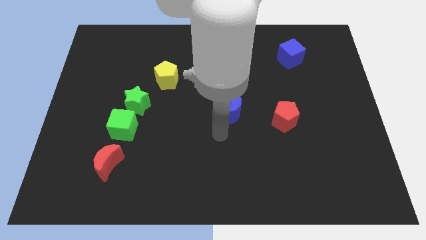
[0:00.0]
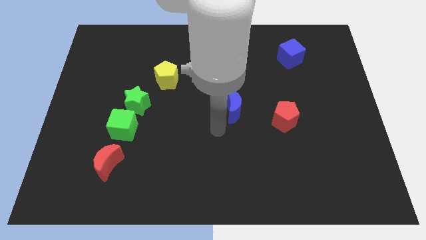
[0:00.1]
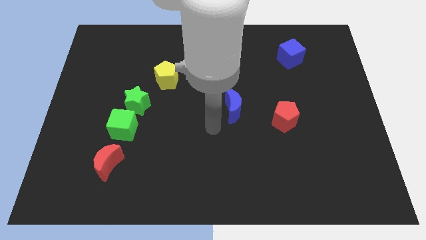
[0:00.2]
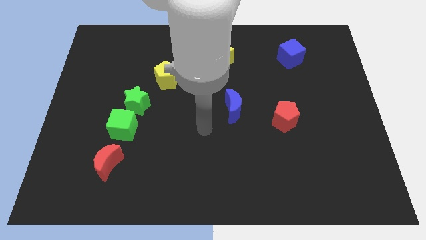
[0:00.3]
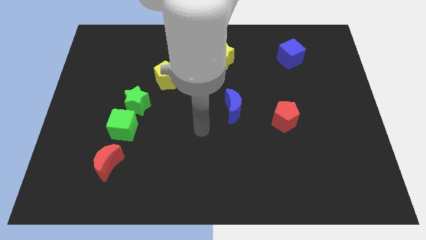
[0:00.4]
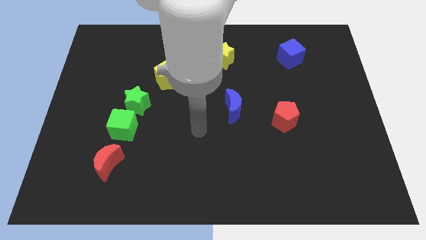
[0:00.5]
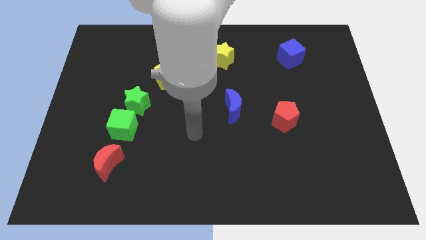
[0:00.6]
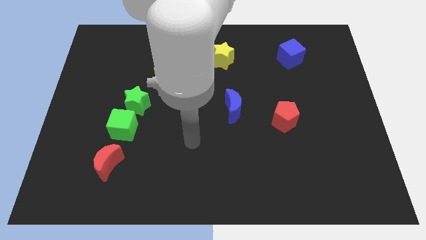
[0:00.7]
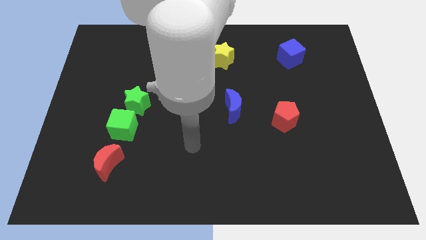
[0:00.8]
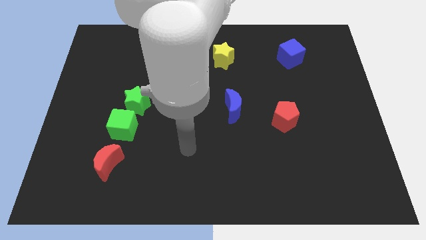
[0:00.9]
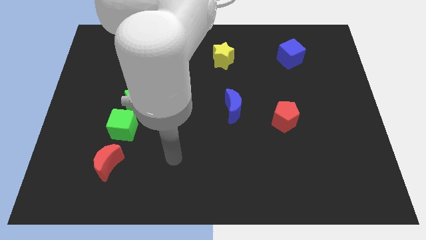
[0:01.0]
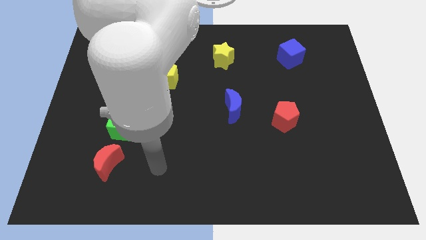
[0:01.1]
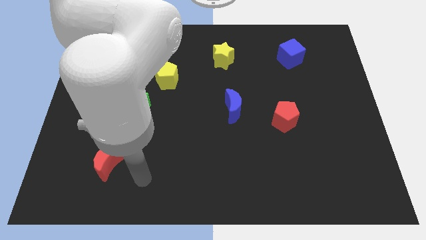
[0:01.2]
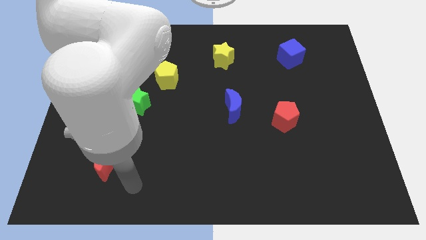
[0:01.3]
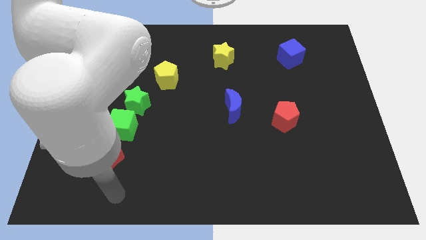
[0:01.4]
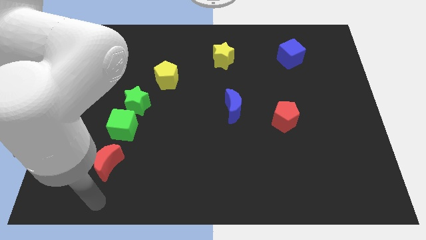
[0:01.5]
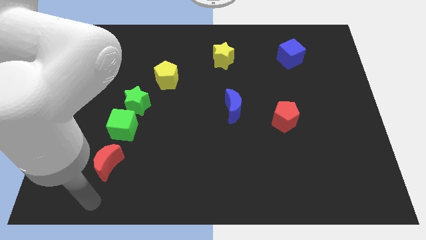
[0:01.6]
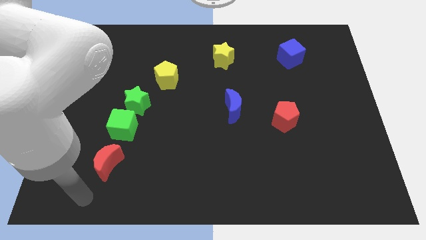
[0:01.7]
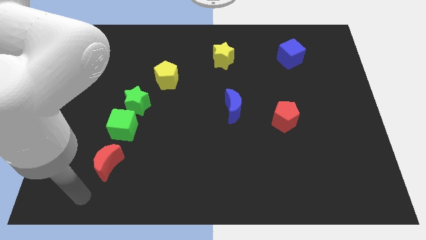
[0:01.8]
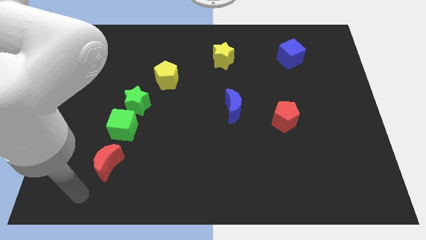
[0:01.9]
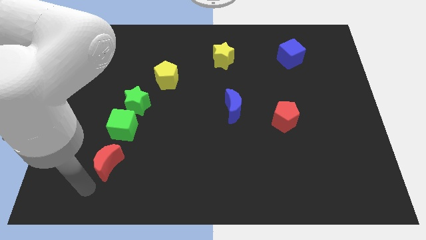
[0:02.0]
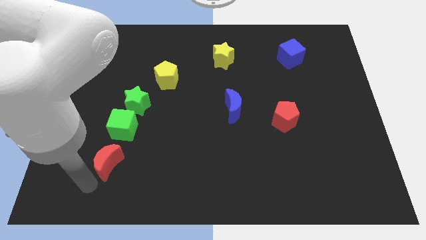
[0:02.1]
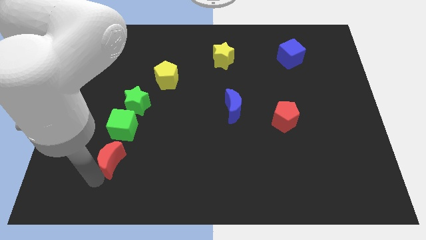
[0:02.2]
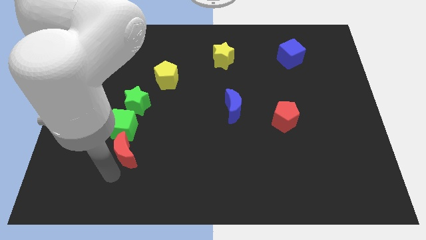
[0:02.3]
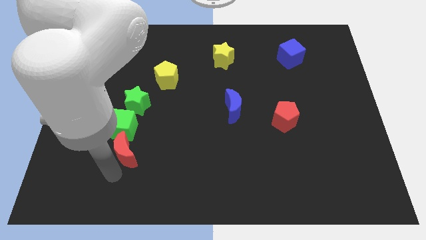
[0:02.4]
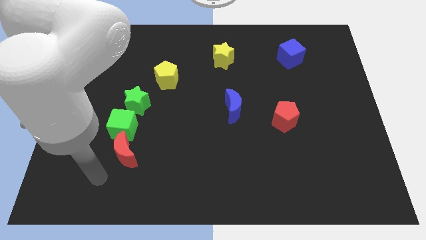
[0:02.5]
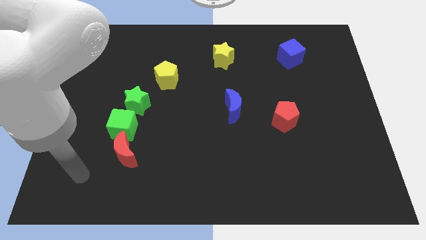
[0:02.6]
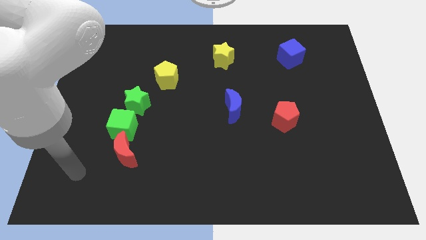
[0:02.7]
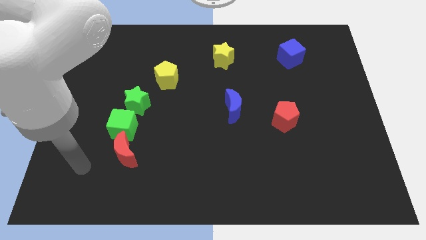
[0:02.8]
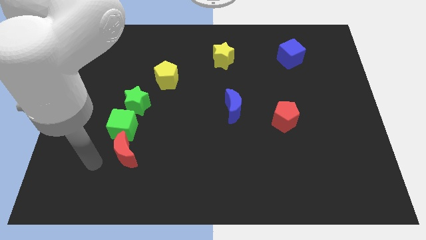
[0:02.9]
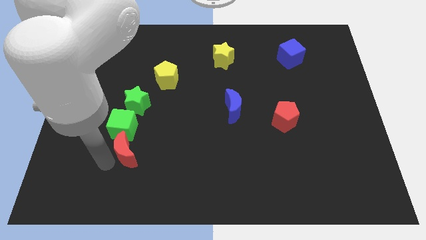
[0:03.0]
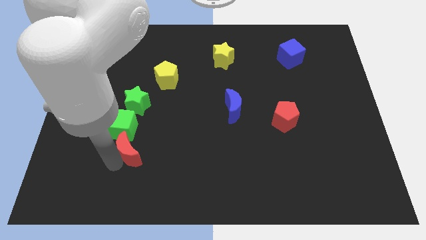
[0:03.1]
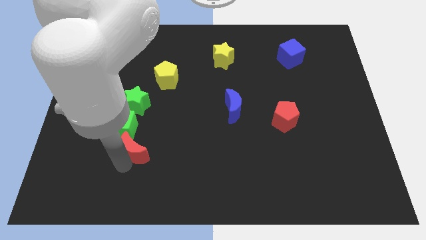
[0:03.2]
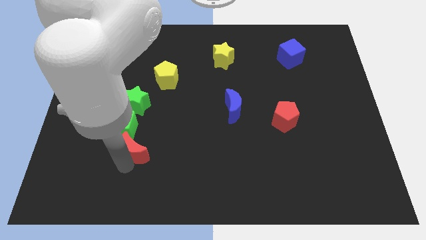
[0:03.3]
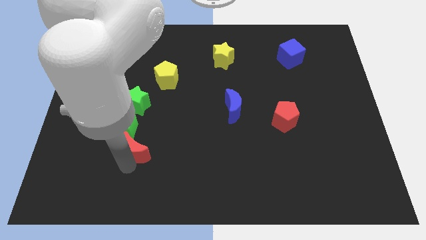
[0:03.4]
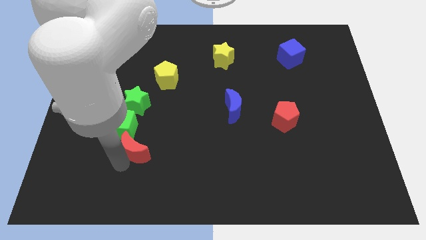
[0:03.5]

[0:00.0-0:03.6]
move red moon slightly right

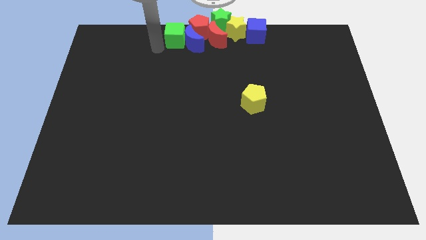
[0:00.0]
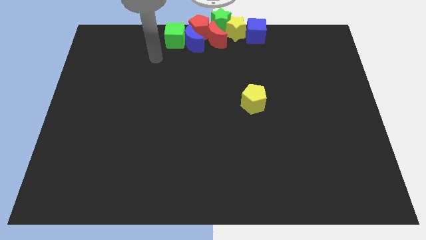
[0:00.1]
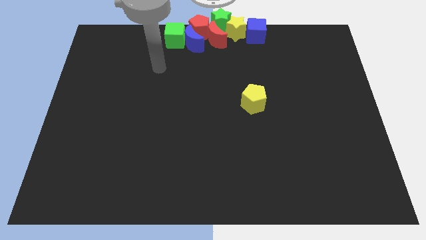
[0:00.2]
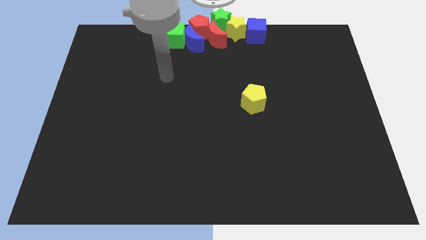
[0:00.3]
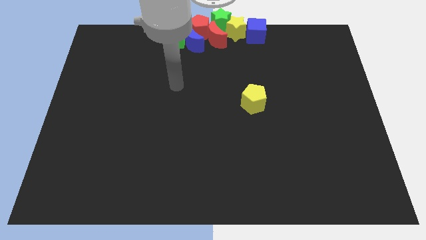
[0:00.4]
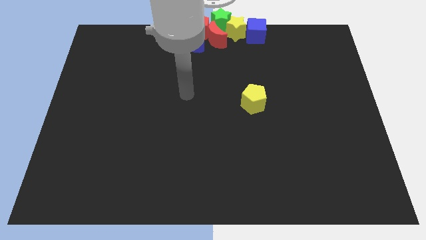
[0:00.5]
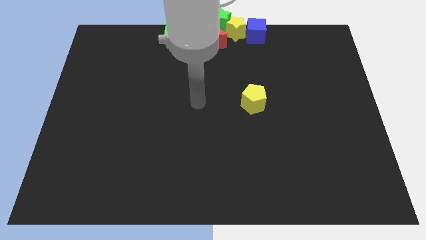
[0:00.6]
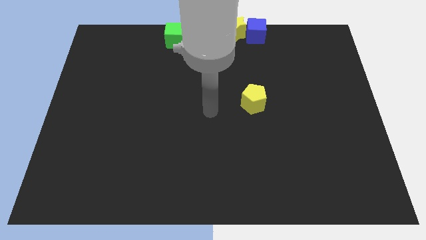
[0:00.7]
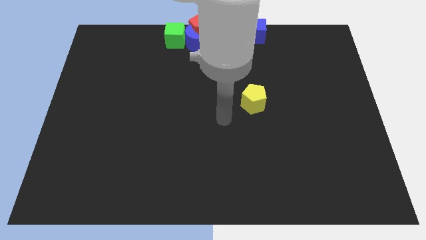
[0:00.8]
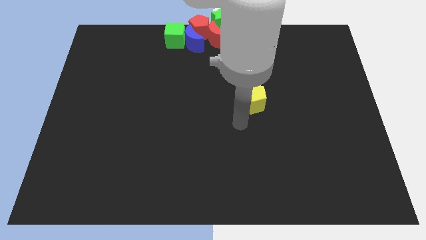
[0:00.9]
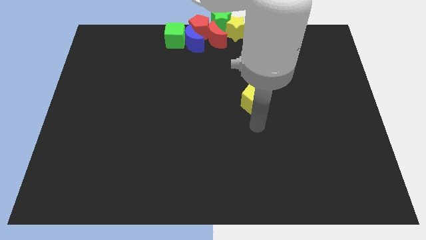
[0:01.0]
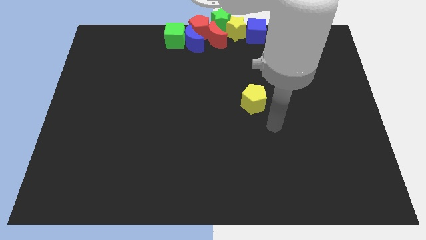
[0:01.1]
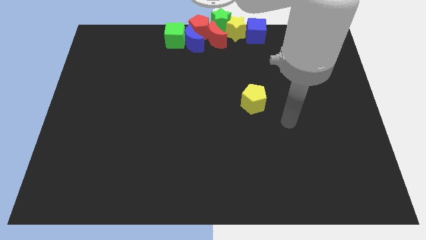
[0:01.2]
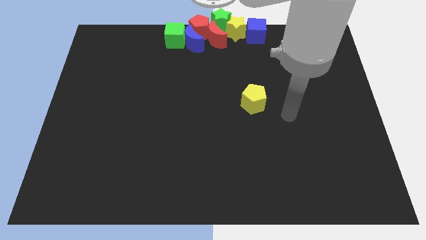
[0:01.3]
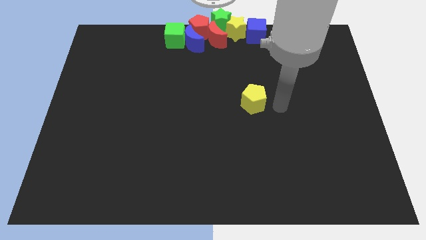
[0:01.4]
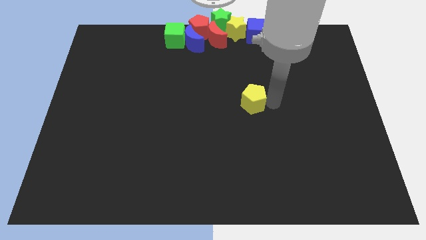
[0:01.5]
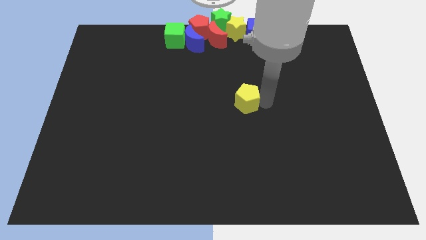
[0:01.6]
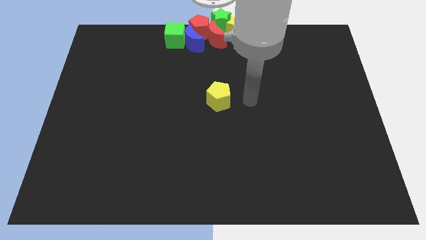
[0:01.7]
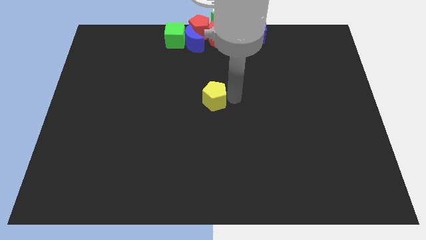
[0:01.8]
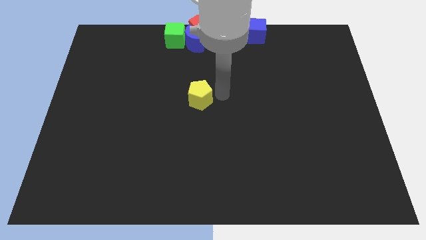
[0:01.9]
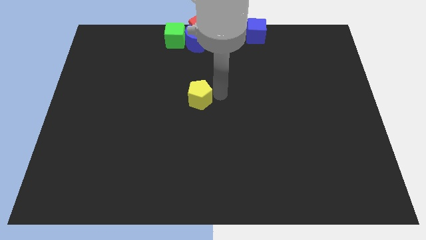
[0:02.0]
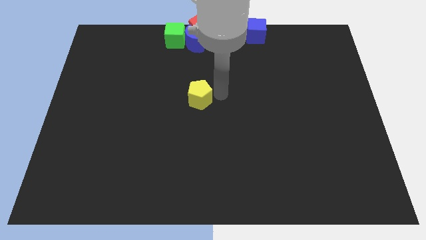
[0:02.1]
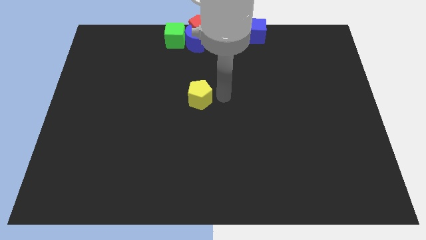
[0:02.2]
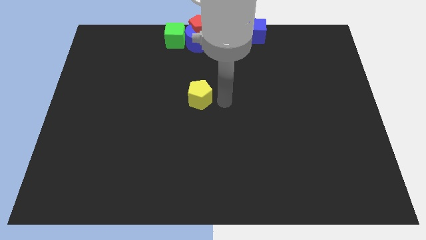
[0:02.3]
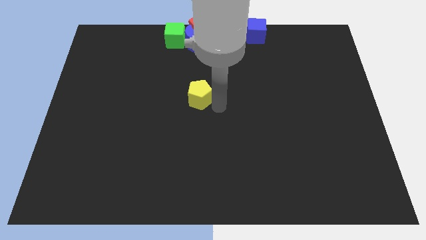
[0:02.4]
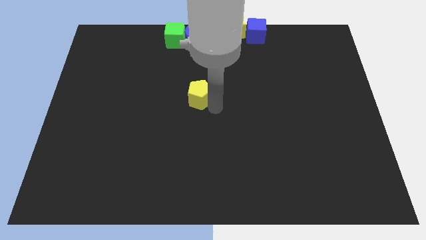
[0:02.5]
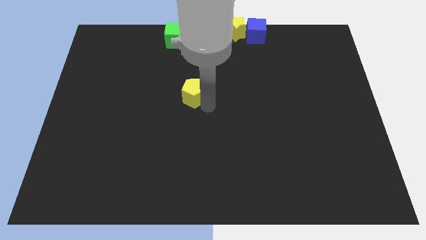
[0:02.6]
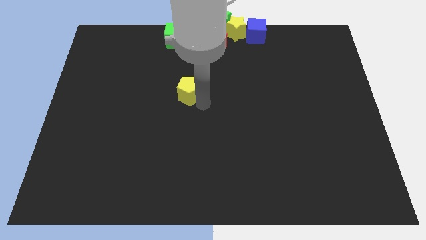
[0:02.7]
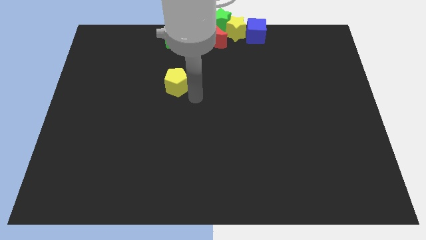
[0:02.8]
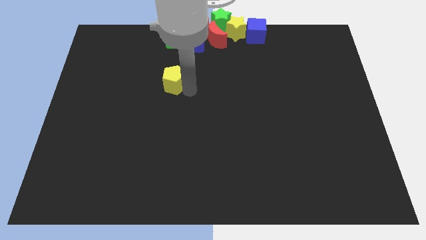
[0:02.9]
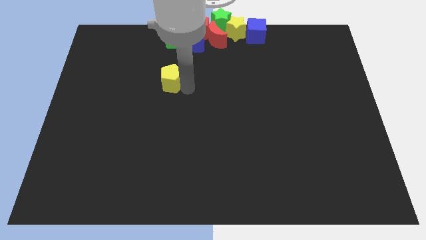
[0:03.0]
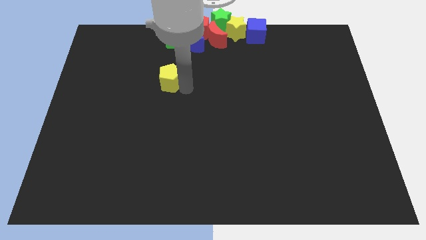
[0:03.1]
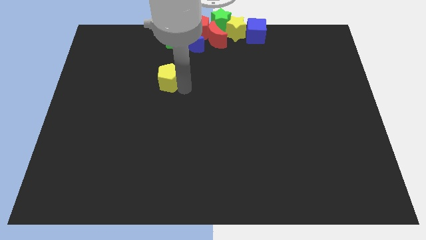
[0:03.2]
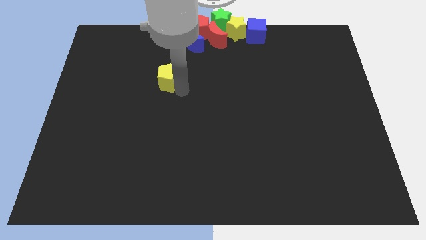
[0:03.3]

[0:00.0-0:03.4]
push the yellow pentagon towards the left

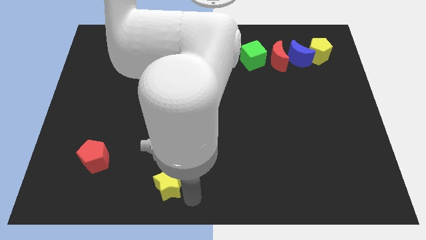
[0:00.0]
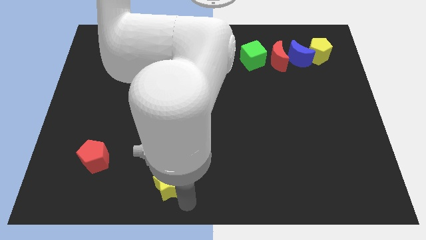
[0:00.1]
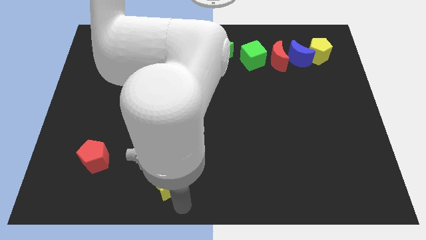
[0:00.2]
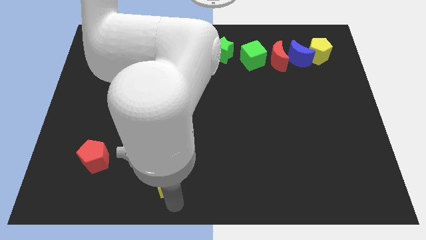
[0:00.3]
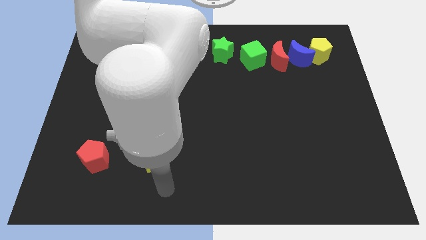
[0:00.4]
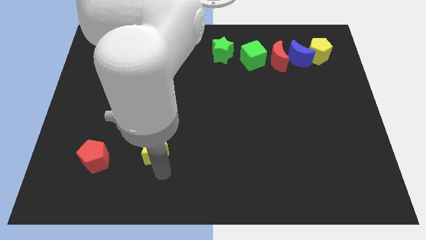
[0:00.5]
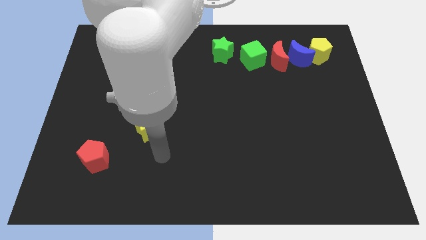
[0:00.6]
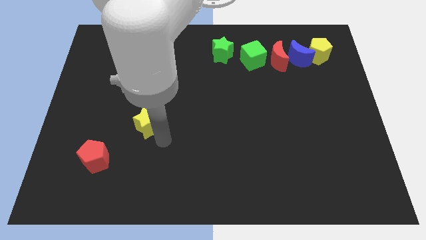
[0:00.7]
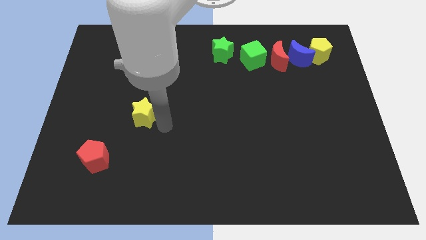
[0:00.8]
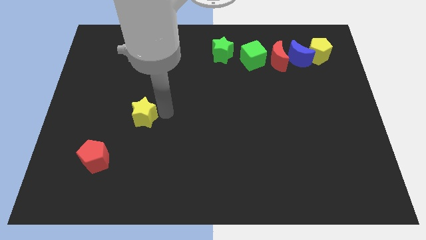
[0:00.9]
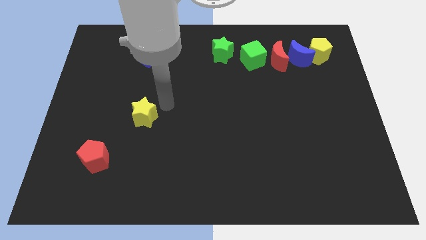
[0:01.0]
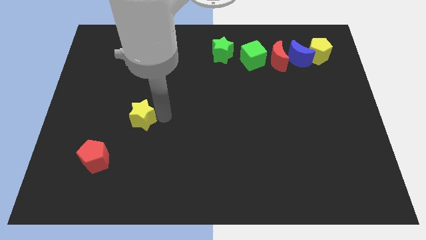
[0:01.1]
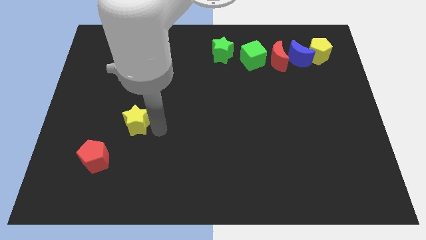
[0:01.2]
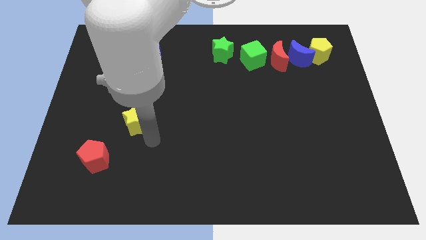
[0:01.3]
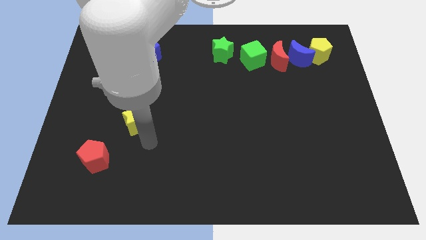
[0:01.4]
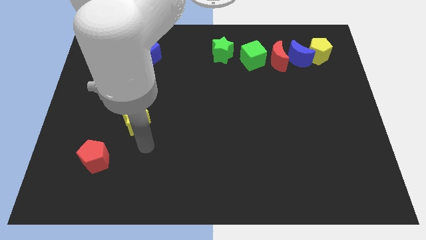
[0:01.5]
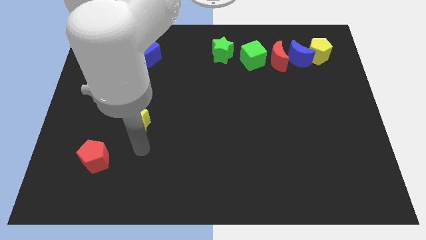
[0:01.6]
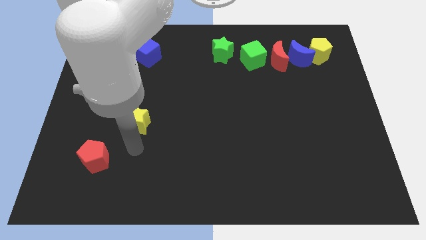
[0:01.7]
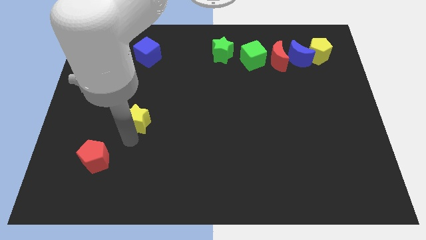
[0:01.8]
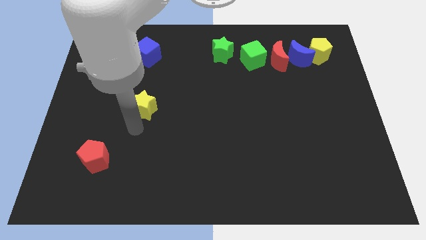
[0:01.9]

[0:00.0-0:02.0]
place the yellow star diagonally top right to the red pentagon
